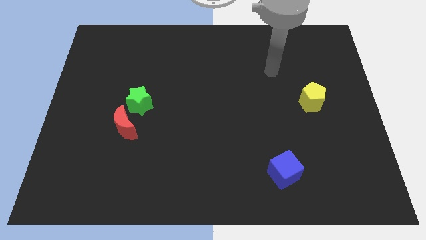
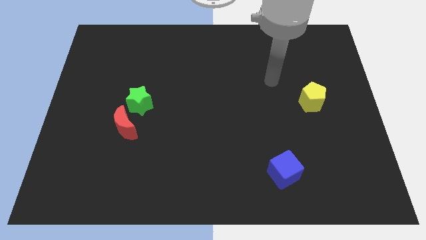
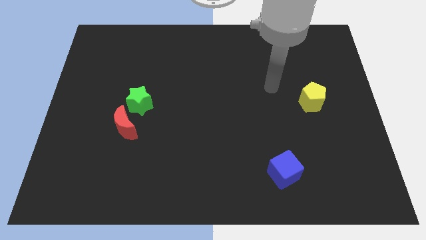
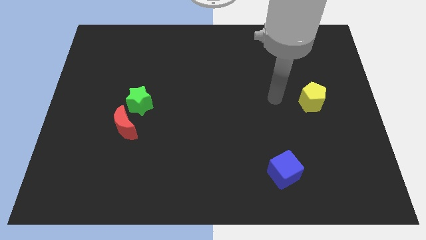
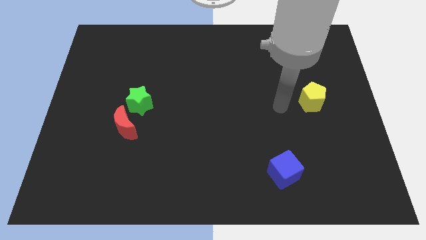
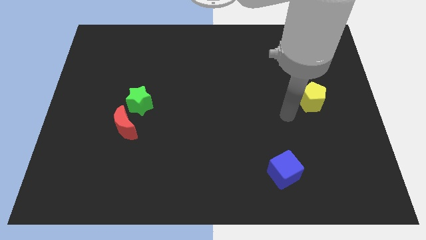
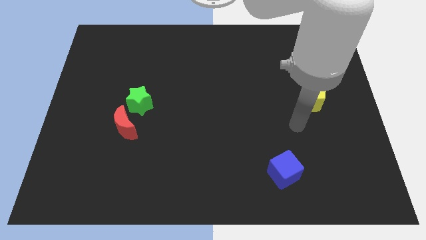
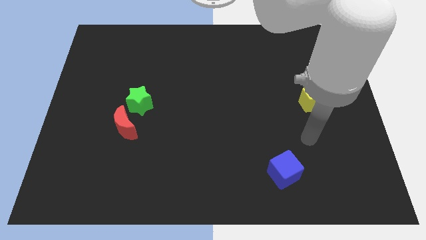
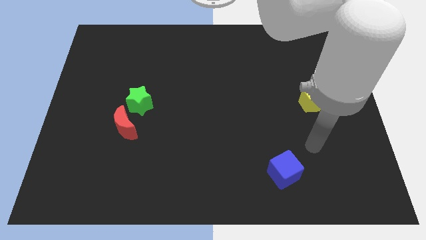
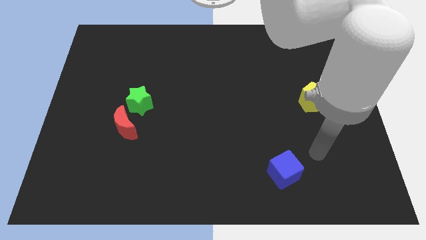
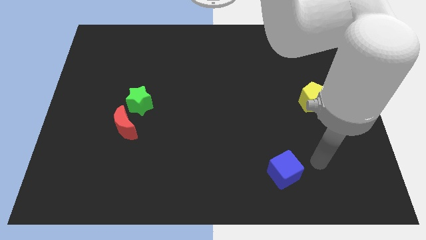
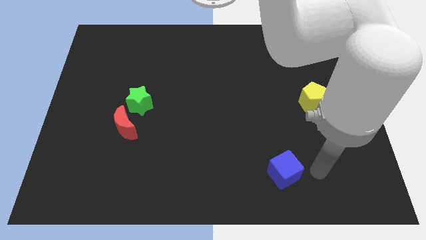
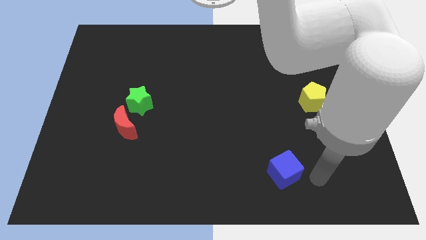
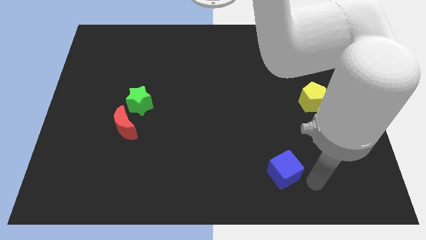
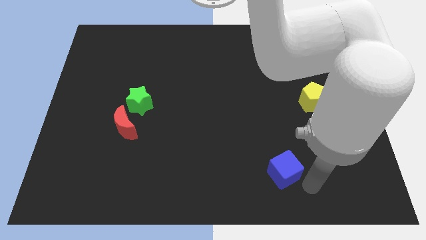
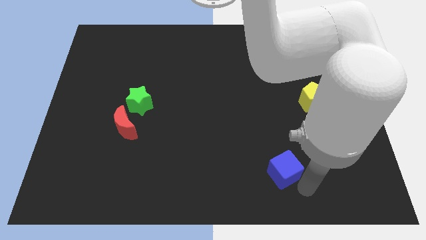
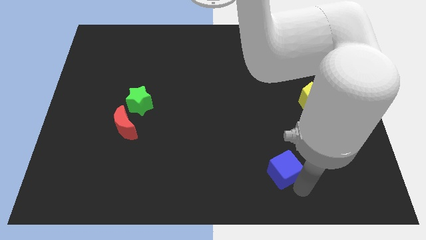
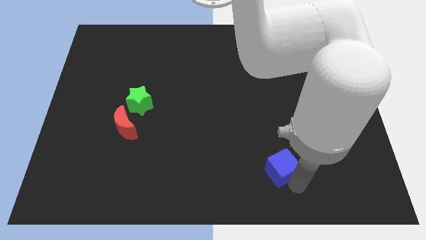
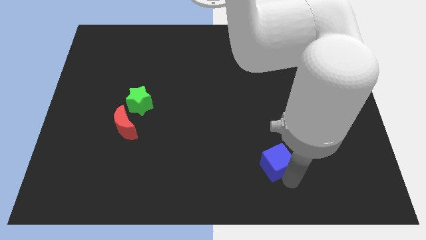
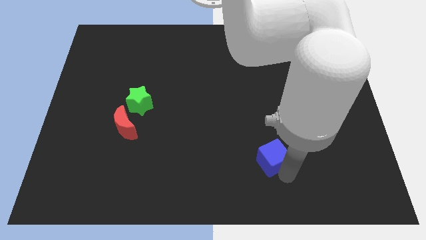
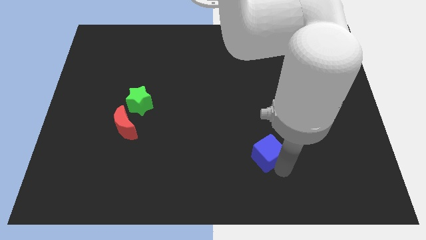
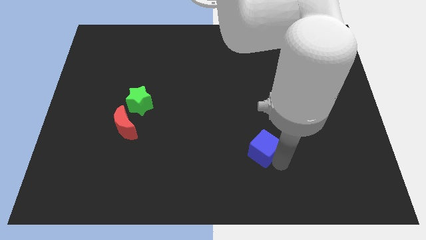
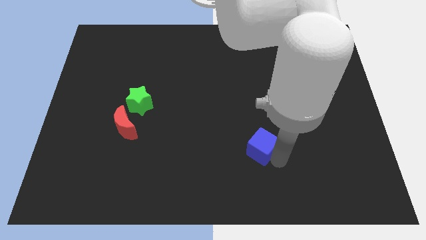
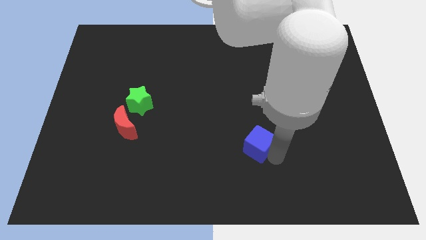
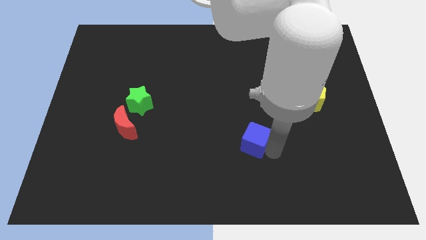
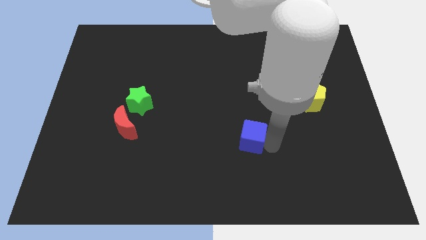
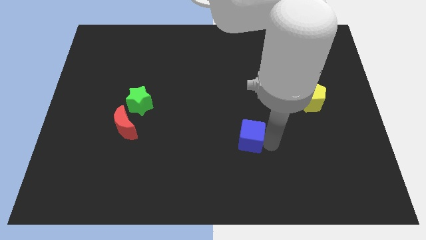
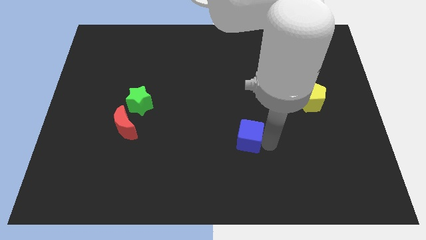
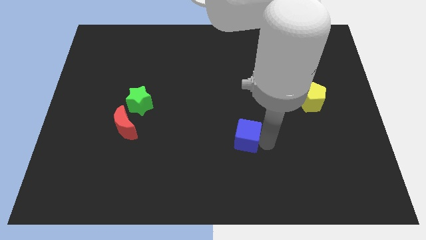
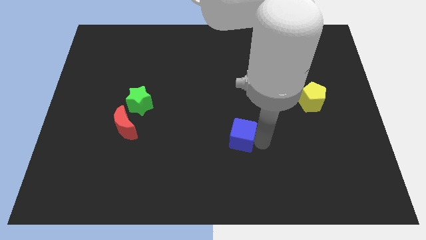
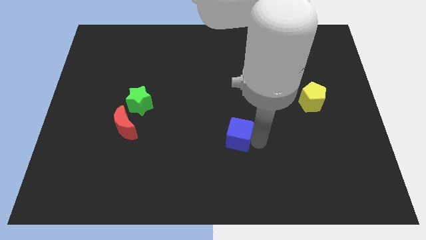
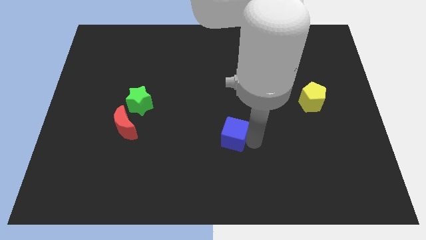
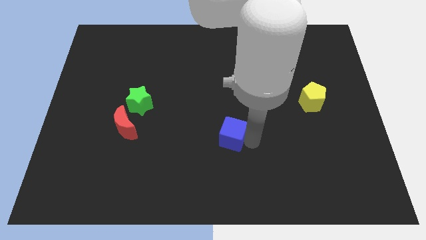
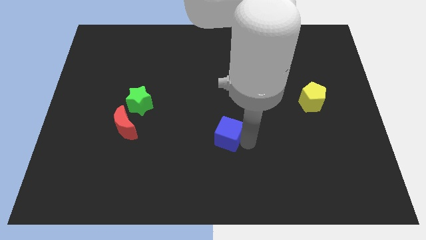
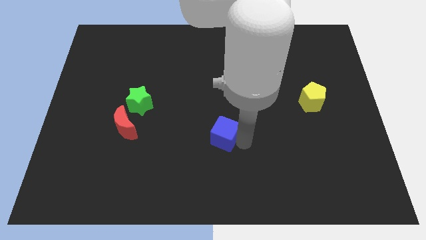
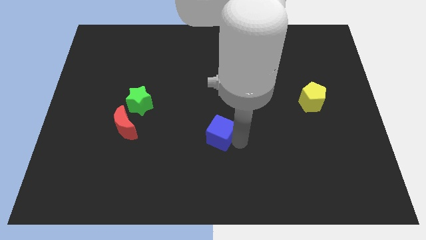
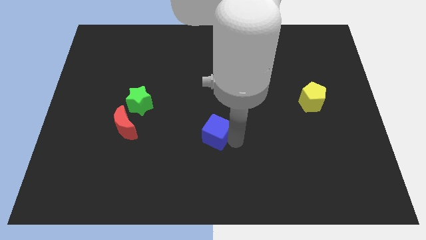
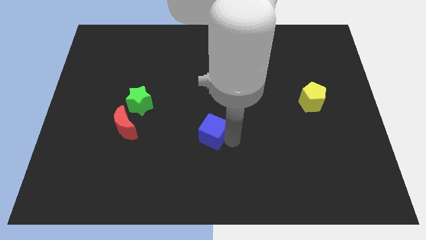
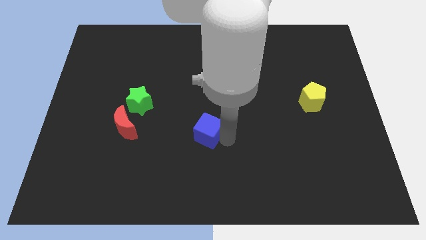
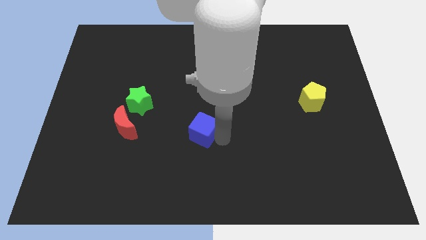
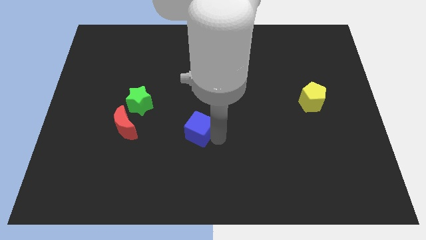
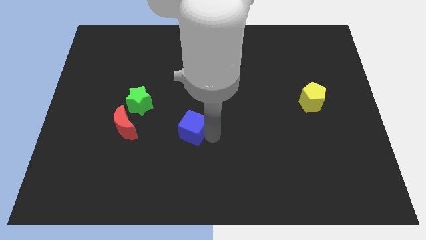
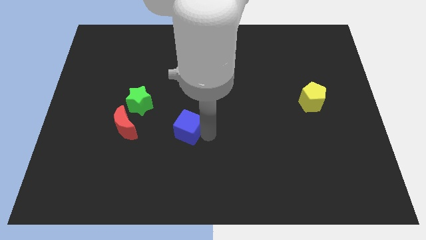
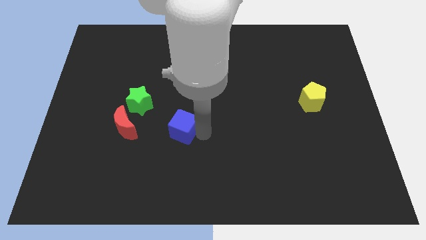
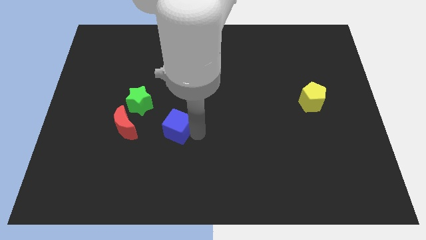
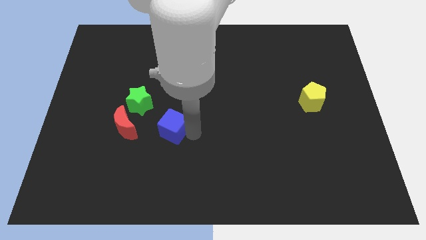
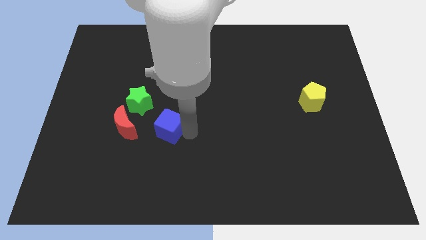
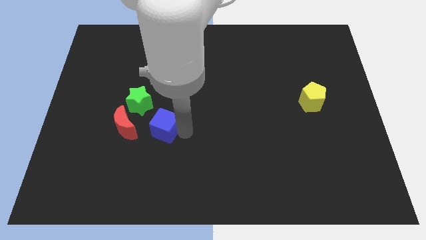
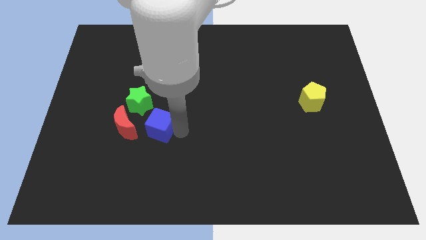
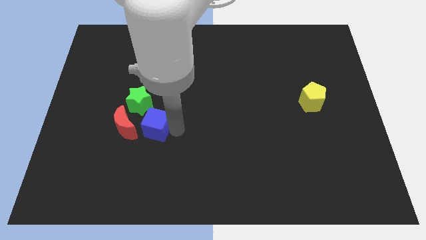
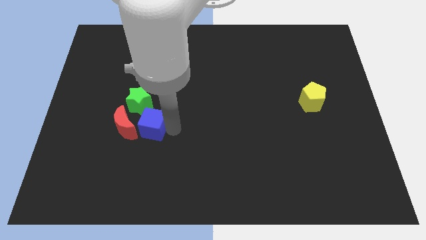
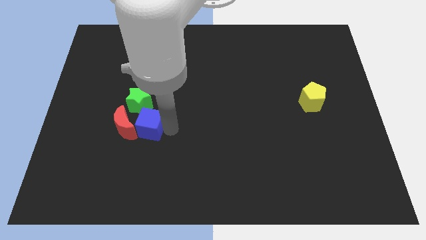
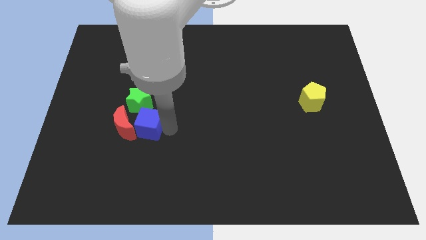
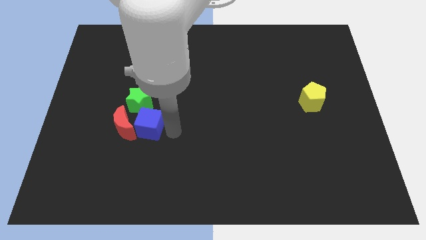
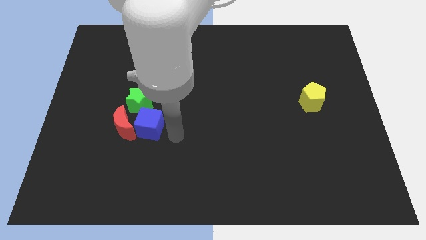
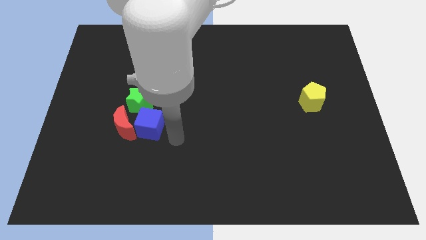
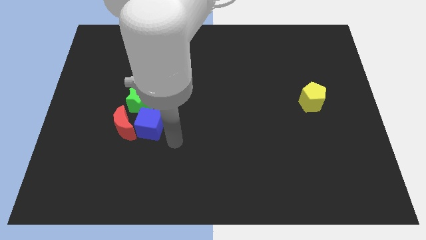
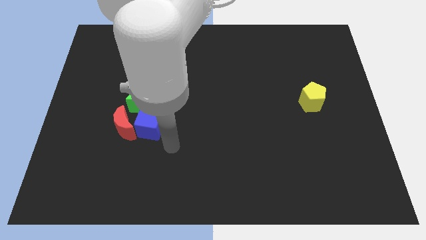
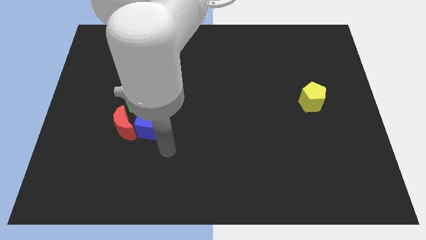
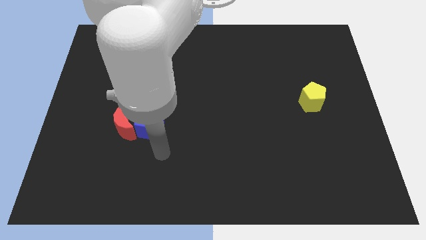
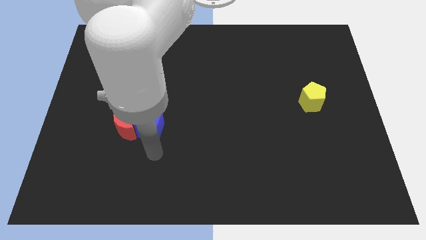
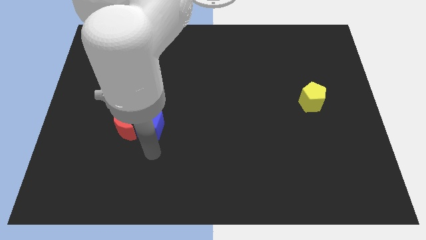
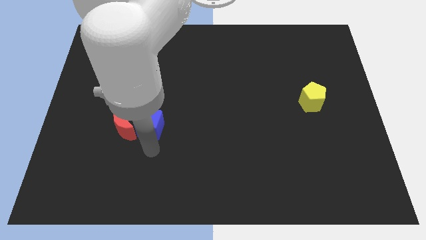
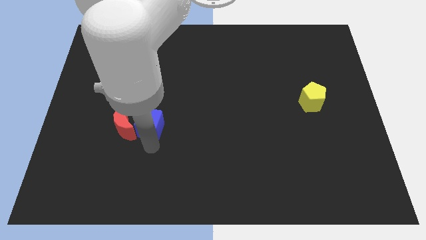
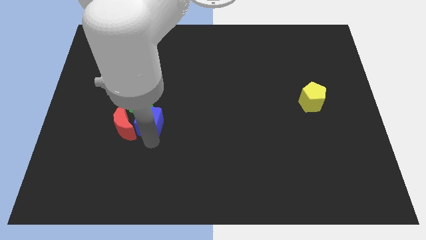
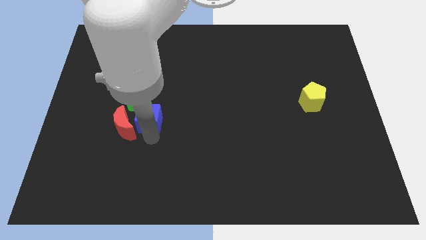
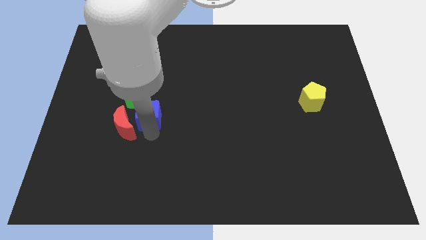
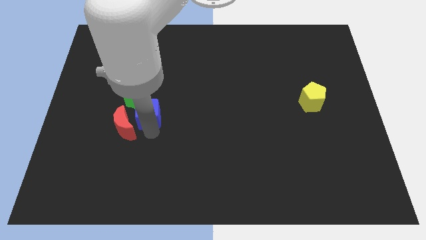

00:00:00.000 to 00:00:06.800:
push the cube next to the green star

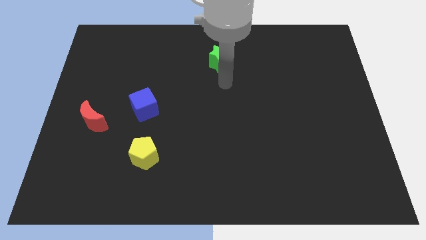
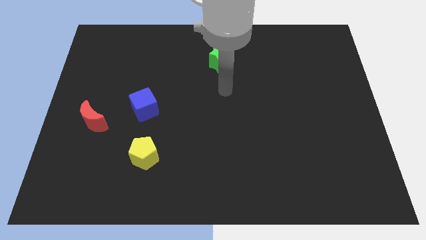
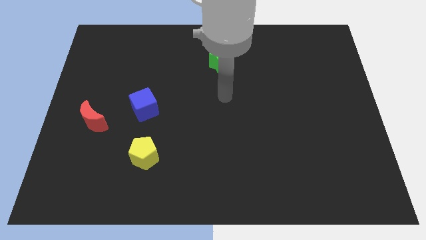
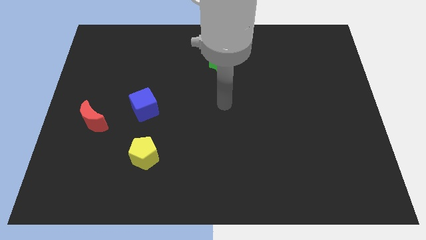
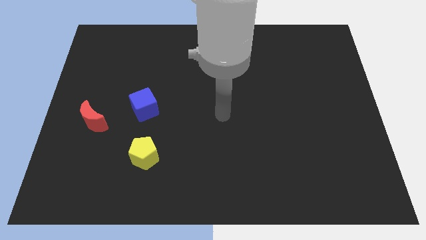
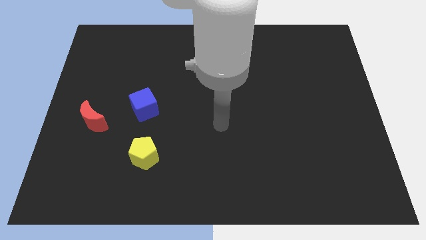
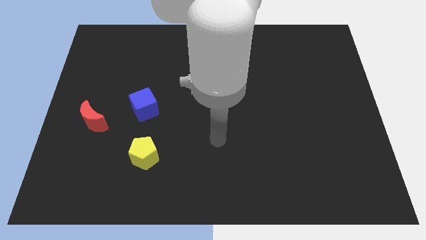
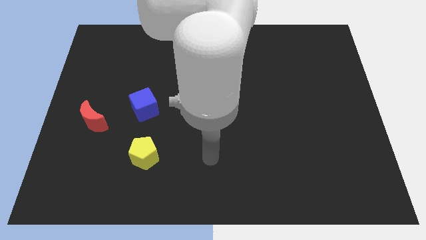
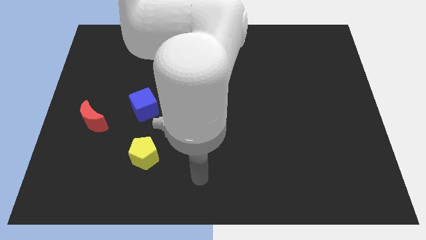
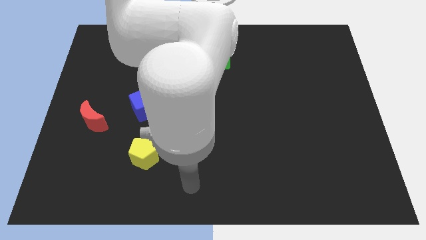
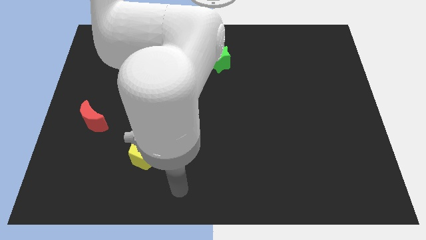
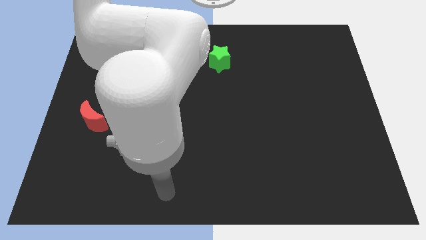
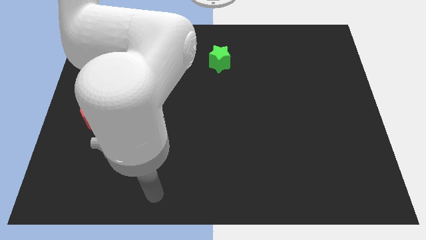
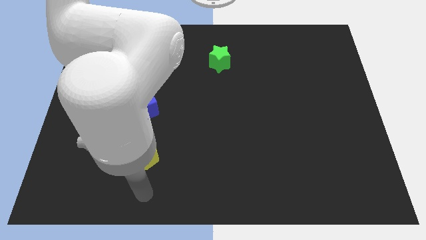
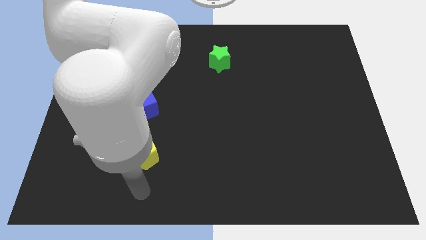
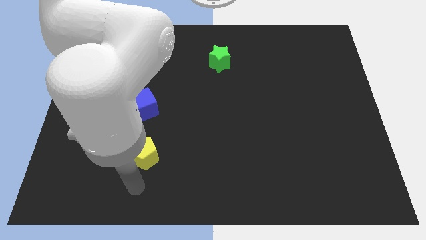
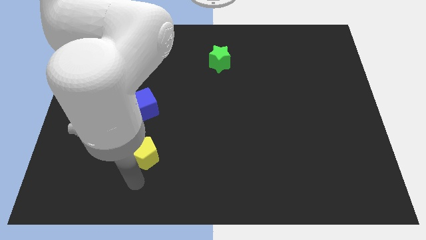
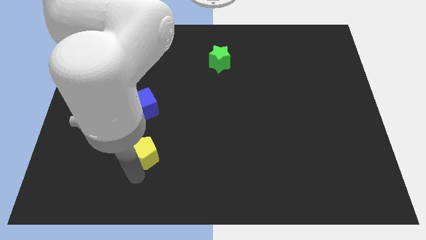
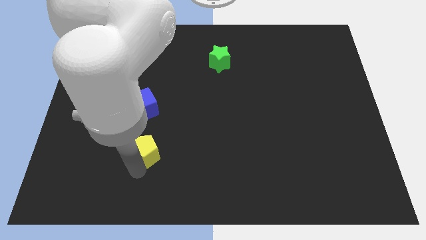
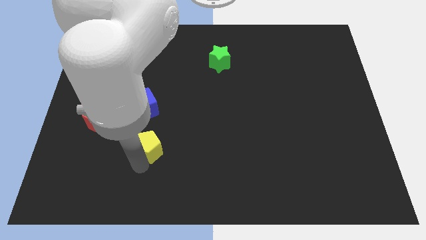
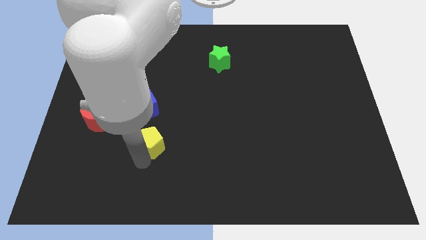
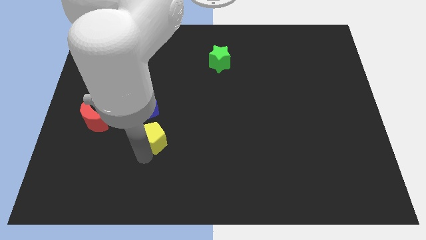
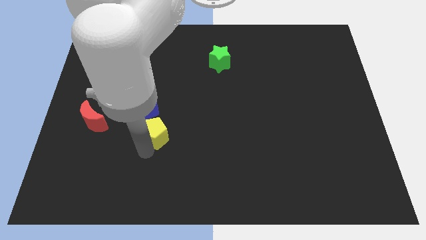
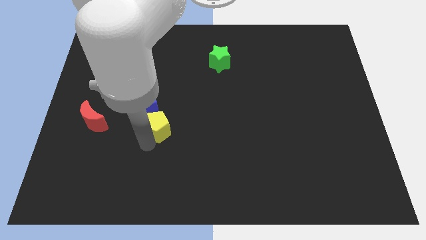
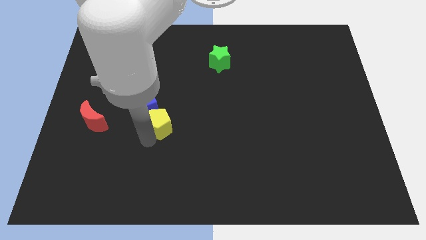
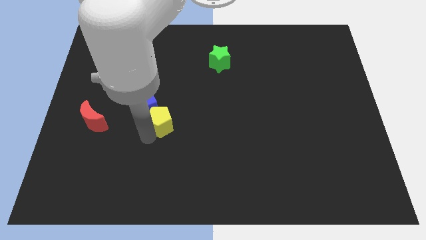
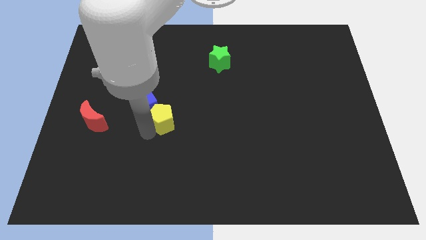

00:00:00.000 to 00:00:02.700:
push the yellow pentagon to the blue cube
